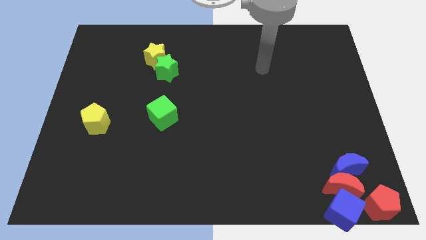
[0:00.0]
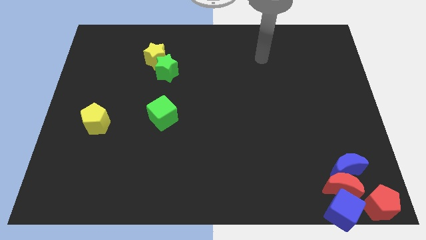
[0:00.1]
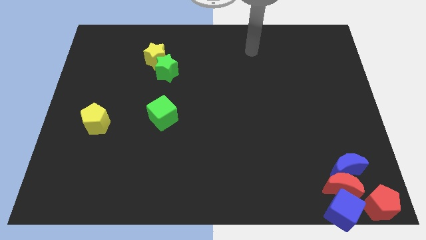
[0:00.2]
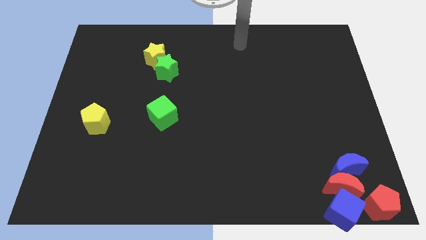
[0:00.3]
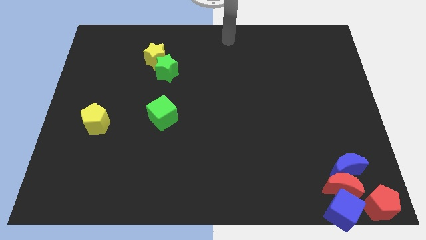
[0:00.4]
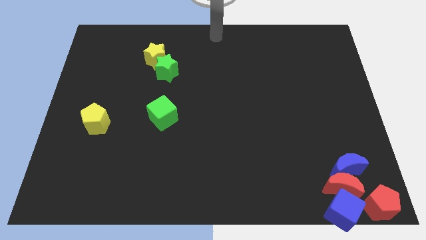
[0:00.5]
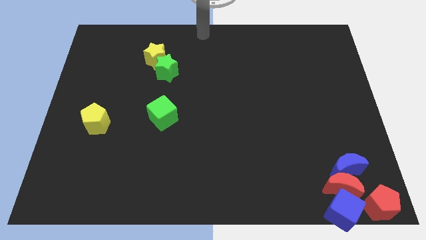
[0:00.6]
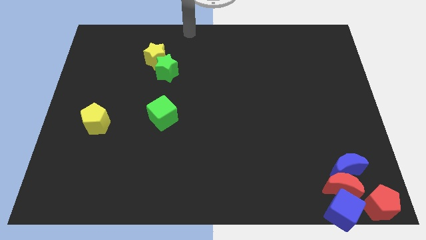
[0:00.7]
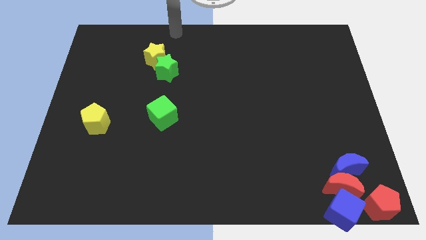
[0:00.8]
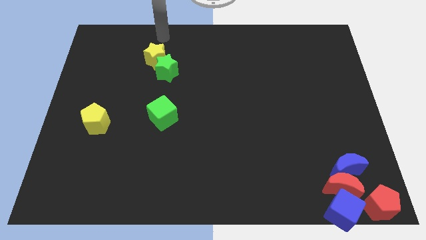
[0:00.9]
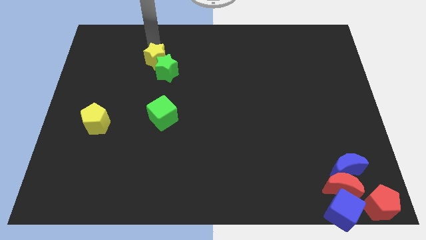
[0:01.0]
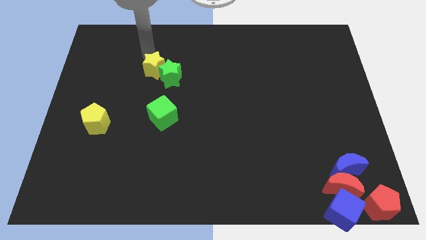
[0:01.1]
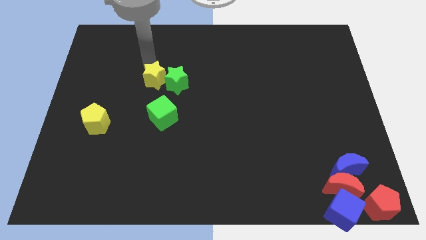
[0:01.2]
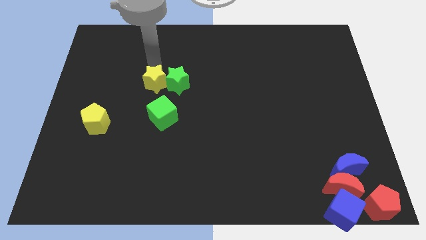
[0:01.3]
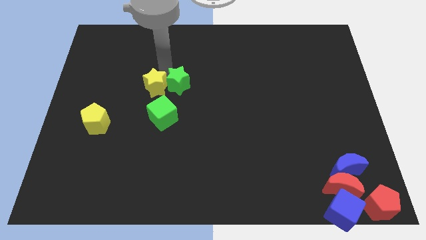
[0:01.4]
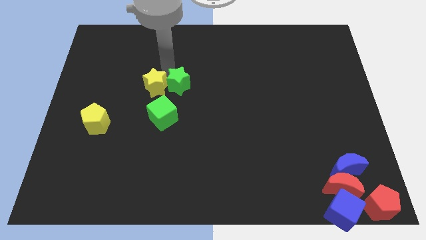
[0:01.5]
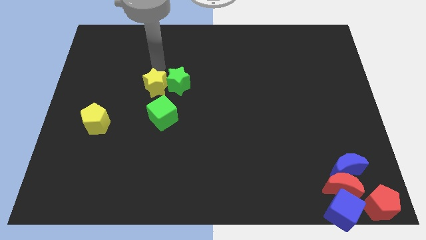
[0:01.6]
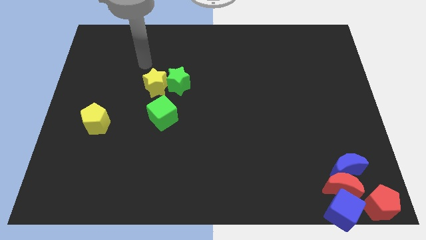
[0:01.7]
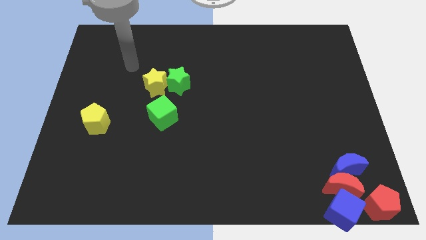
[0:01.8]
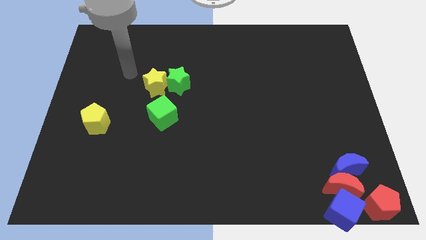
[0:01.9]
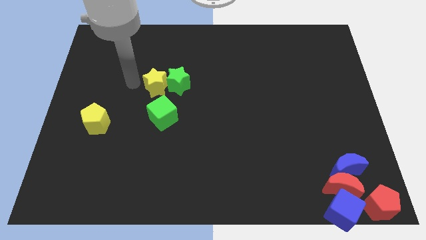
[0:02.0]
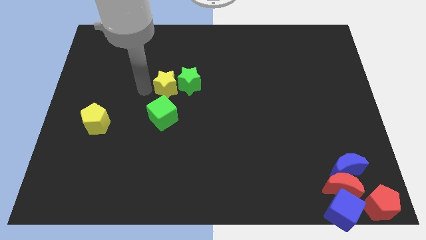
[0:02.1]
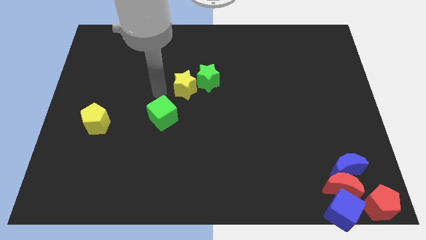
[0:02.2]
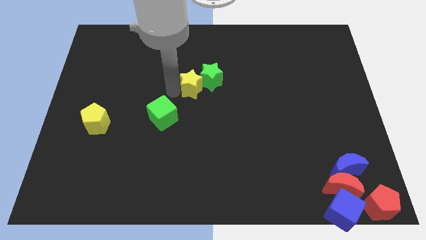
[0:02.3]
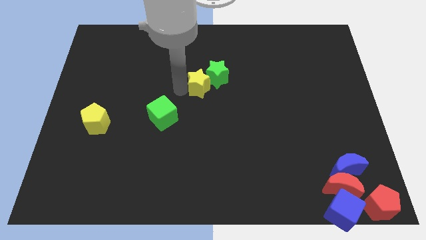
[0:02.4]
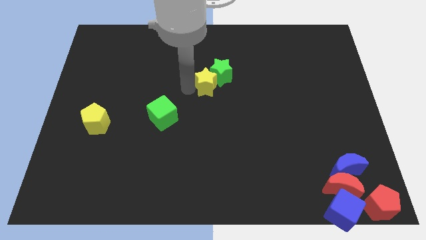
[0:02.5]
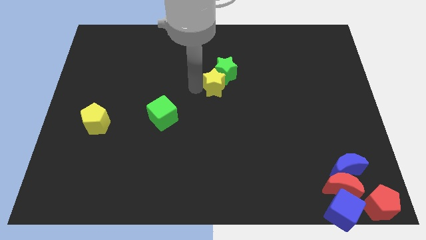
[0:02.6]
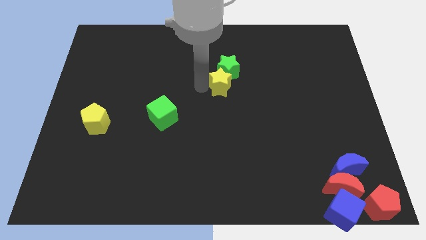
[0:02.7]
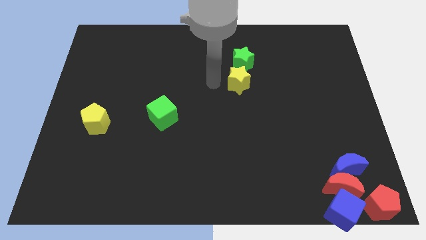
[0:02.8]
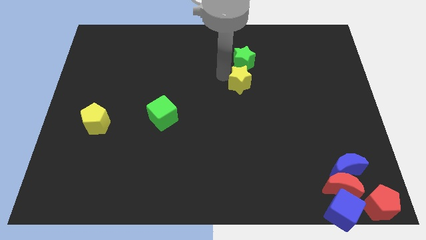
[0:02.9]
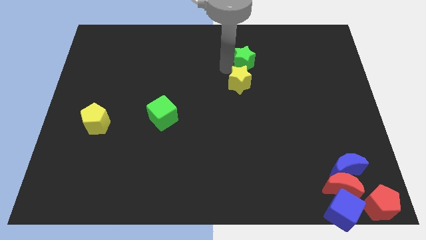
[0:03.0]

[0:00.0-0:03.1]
slide the yellow and green stars to the right side of the table

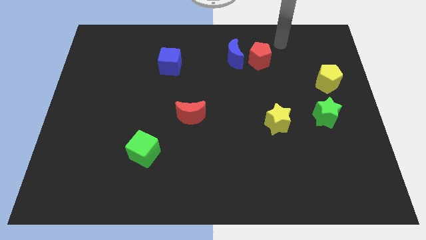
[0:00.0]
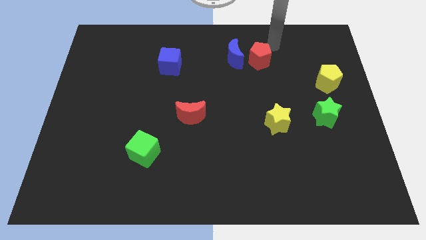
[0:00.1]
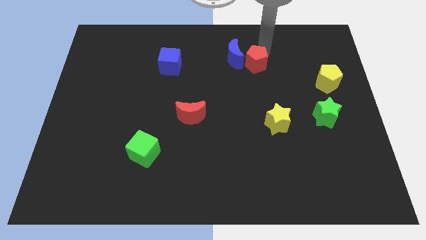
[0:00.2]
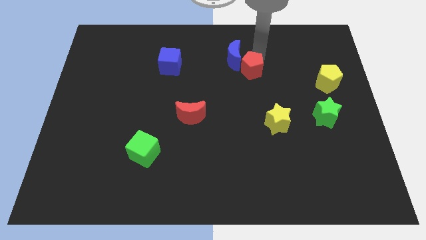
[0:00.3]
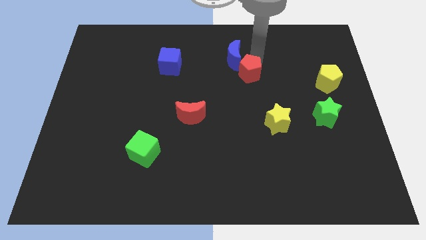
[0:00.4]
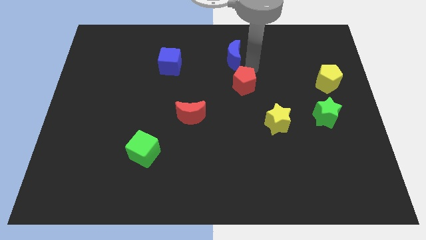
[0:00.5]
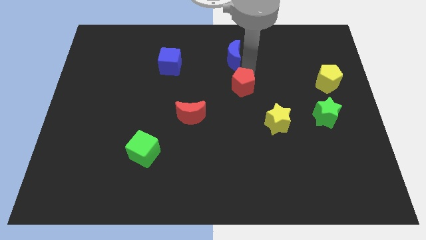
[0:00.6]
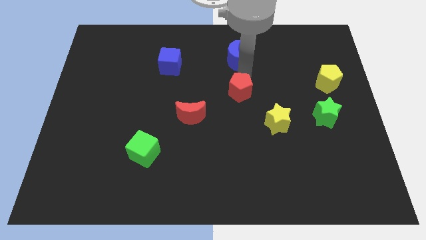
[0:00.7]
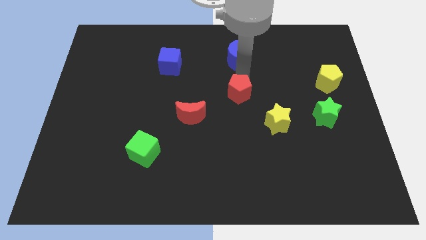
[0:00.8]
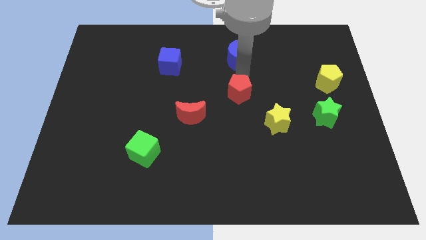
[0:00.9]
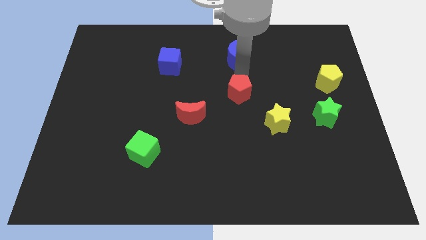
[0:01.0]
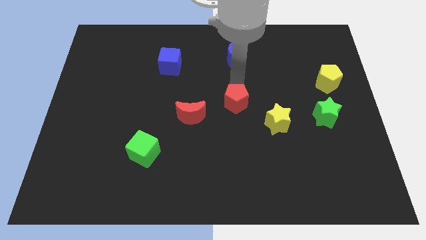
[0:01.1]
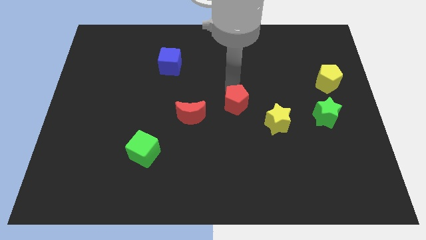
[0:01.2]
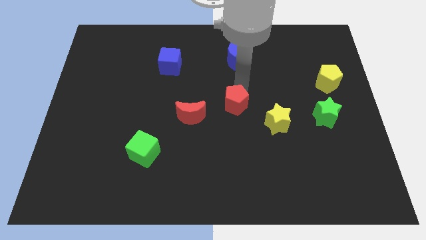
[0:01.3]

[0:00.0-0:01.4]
separate the red pentagon from blue crescent

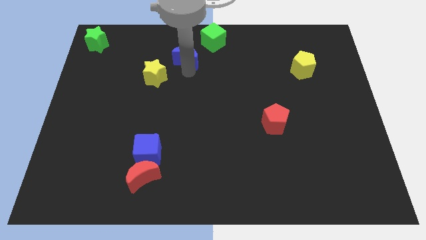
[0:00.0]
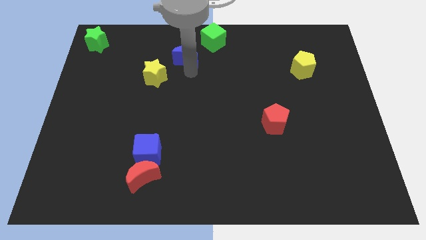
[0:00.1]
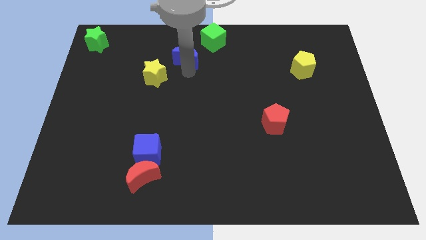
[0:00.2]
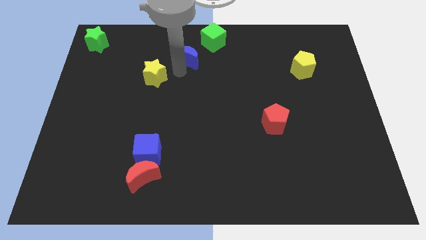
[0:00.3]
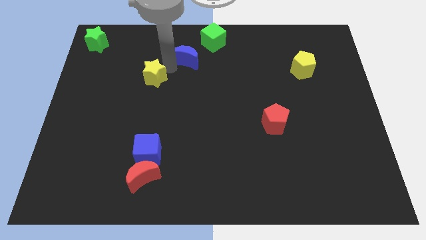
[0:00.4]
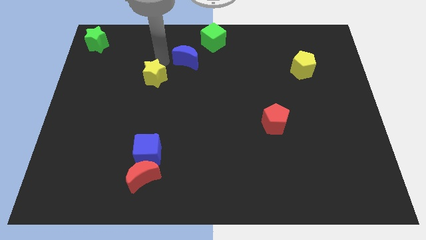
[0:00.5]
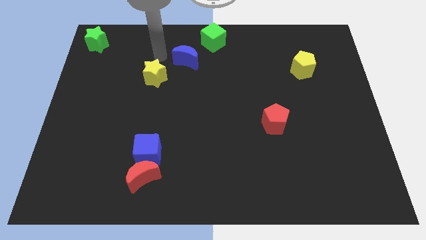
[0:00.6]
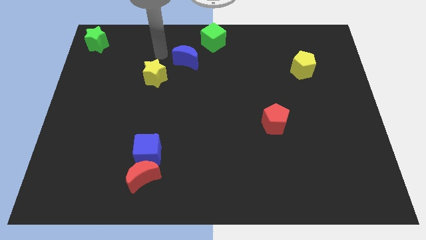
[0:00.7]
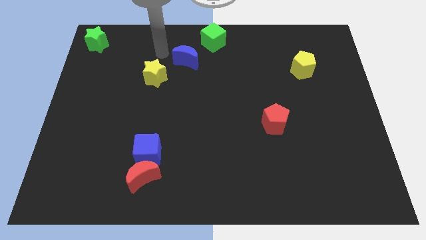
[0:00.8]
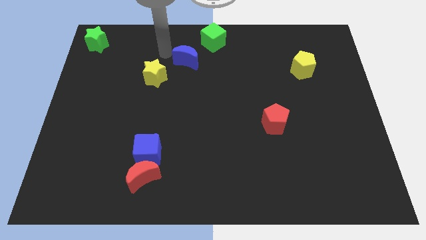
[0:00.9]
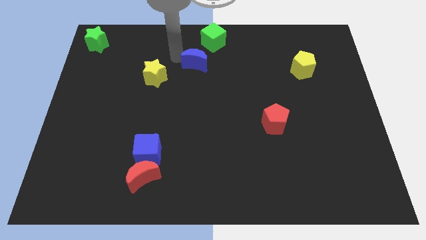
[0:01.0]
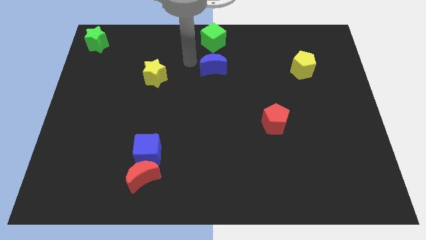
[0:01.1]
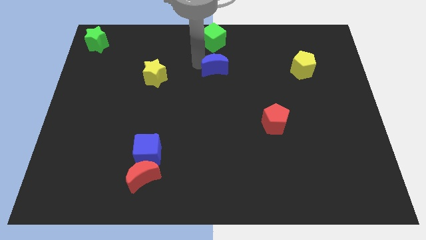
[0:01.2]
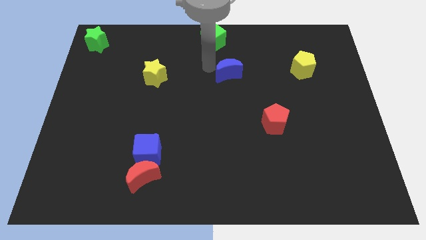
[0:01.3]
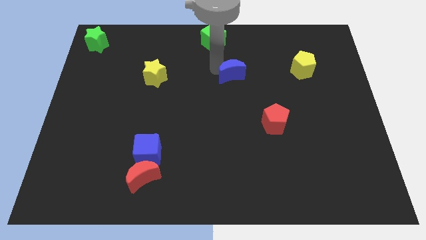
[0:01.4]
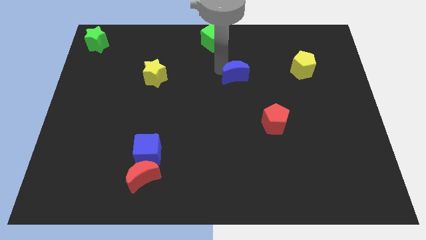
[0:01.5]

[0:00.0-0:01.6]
place the blue moon in between green cube and red pentagon

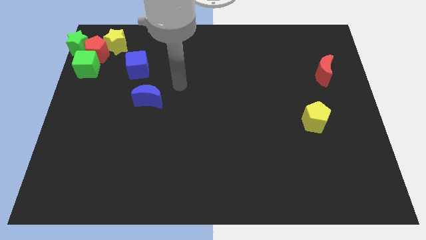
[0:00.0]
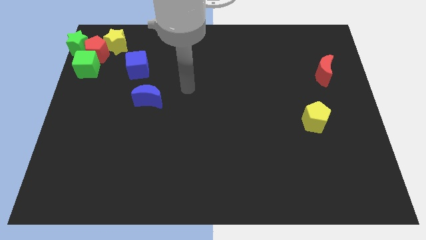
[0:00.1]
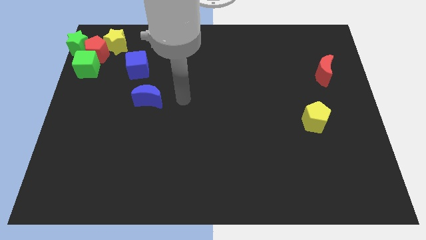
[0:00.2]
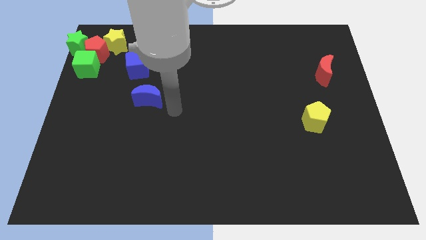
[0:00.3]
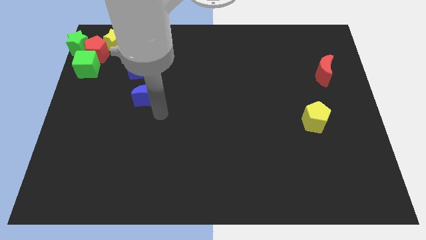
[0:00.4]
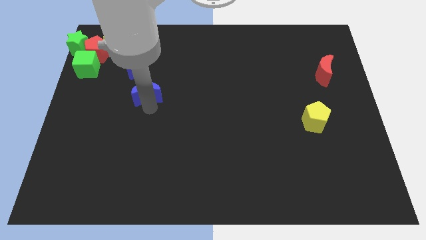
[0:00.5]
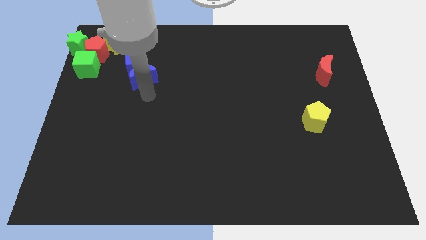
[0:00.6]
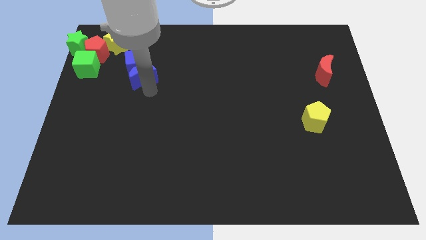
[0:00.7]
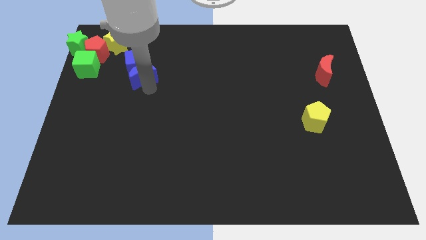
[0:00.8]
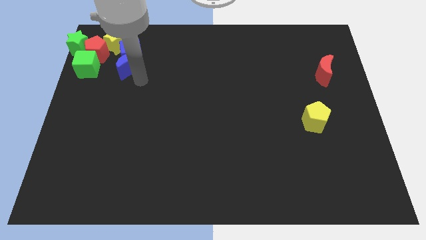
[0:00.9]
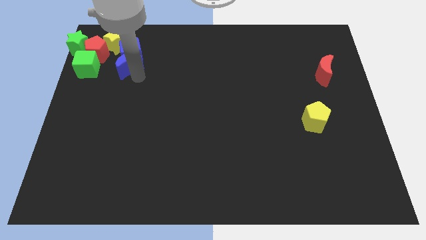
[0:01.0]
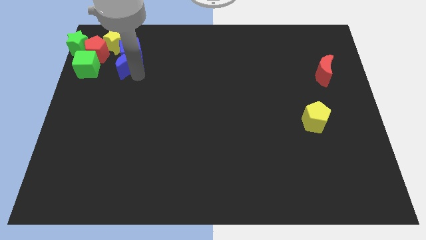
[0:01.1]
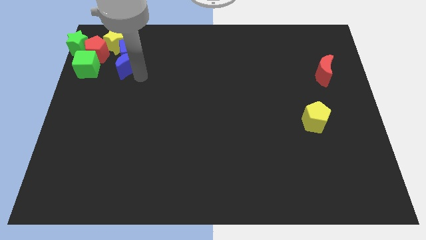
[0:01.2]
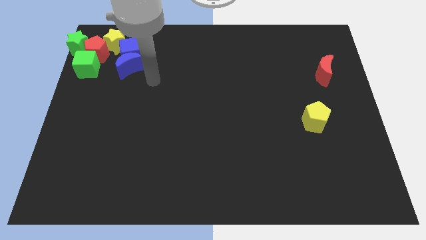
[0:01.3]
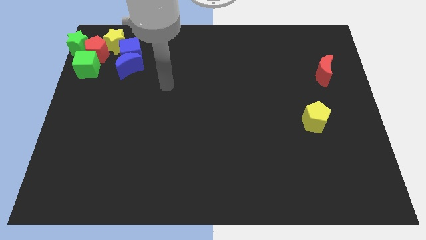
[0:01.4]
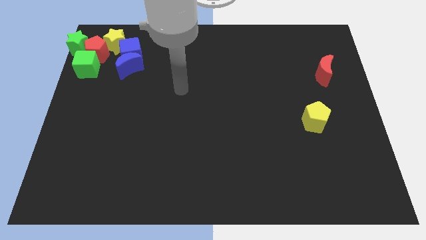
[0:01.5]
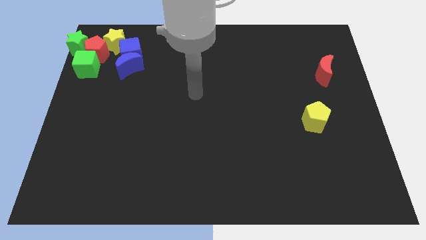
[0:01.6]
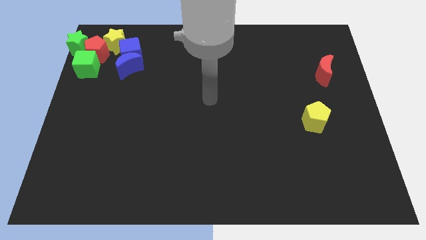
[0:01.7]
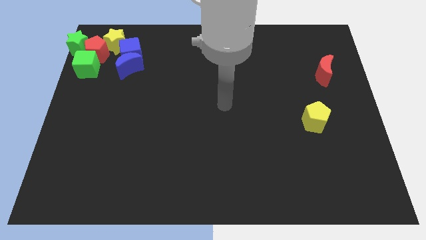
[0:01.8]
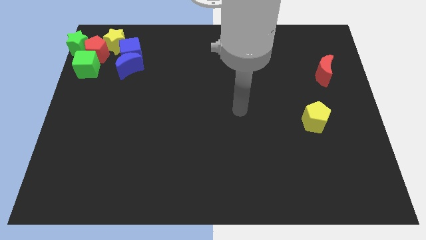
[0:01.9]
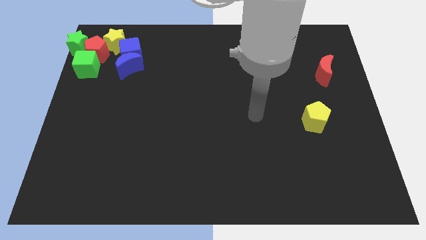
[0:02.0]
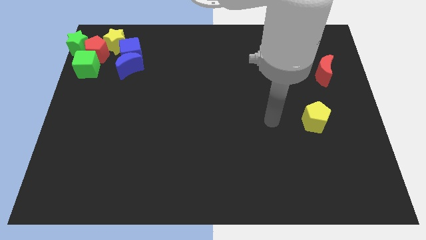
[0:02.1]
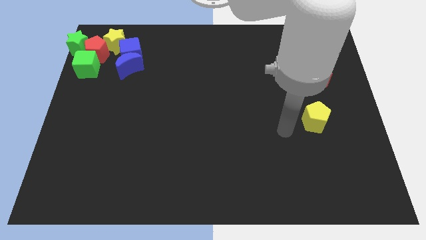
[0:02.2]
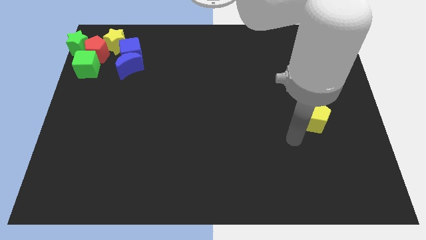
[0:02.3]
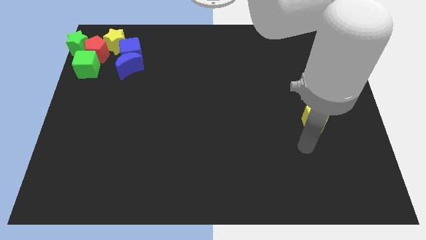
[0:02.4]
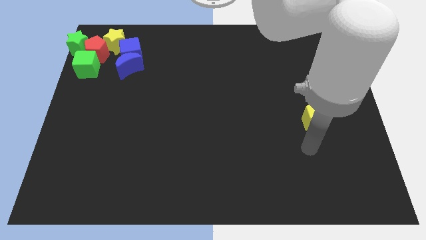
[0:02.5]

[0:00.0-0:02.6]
move your arm towards the yellow pentagon

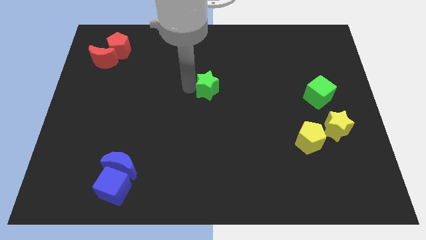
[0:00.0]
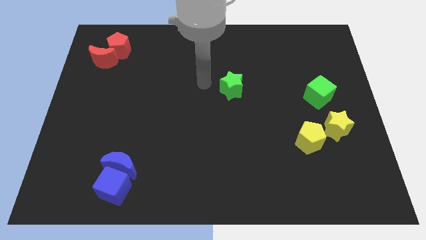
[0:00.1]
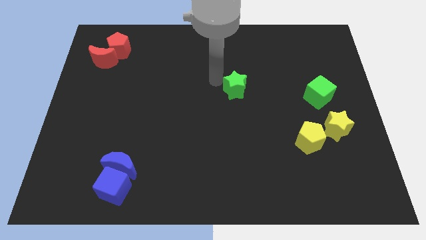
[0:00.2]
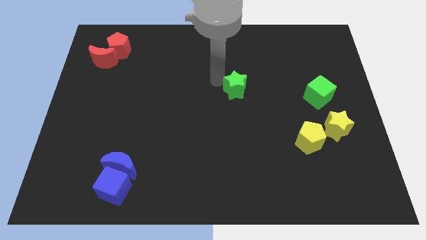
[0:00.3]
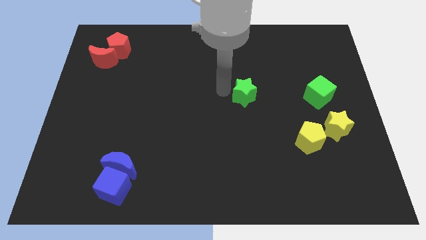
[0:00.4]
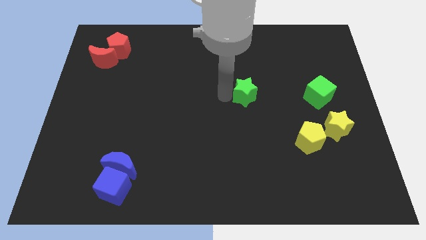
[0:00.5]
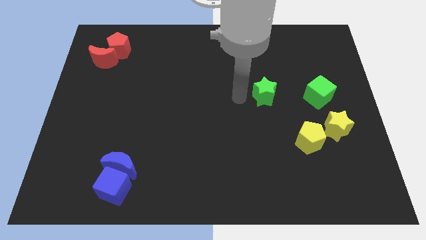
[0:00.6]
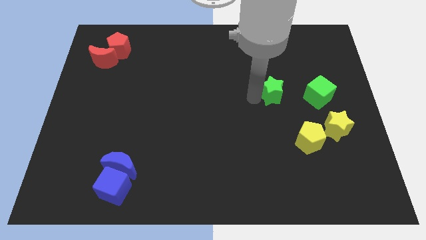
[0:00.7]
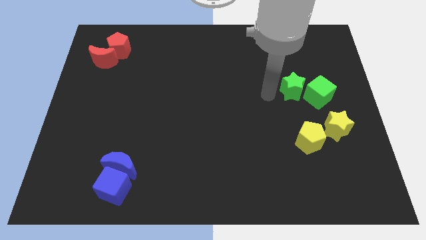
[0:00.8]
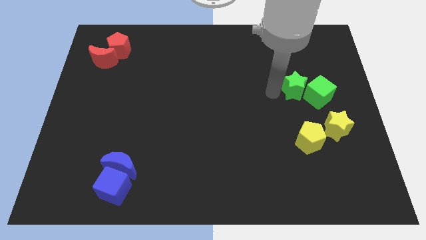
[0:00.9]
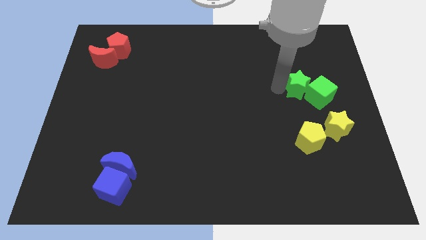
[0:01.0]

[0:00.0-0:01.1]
push the green star into green cube
